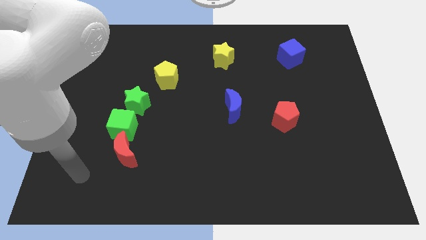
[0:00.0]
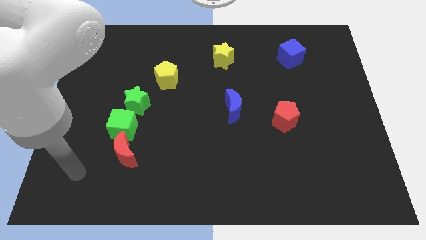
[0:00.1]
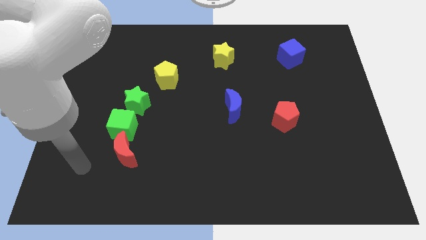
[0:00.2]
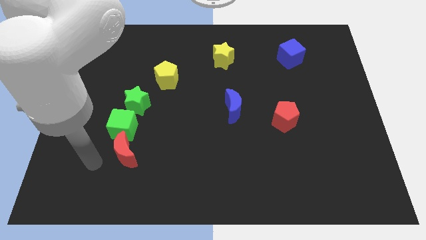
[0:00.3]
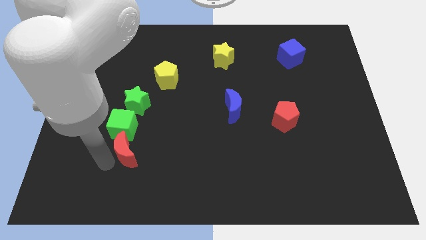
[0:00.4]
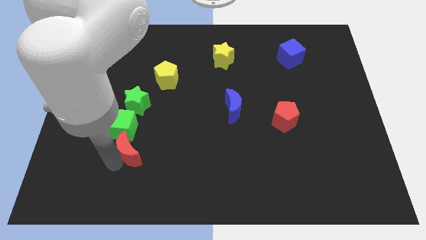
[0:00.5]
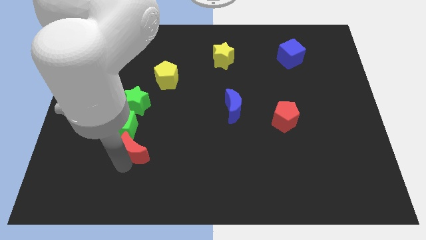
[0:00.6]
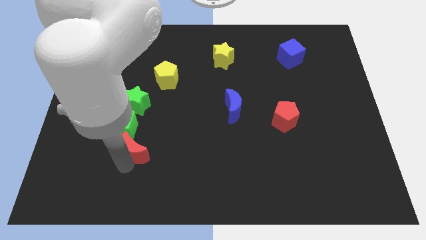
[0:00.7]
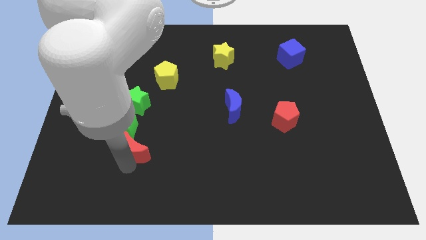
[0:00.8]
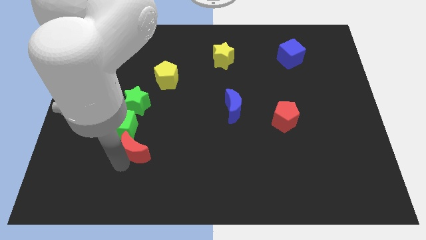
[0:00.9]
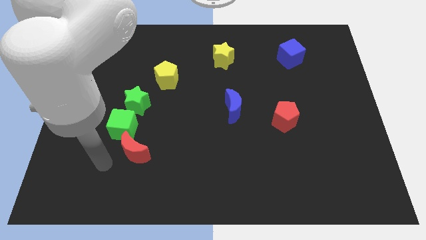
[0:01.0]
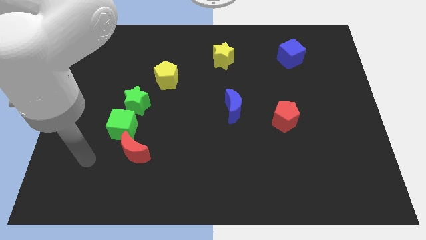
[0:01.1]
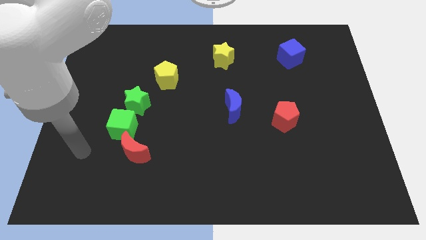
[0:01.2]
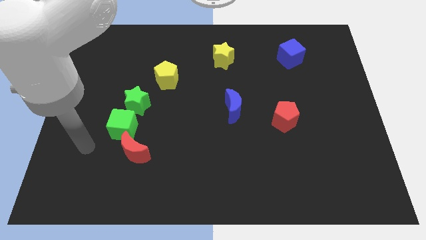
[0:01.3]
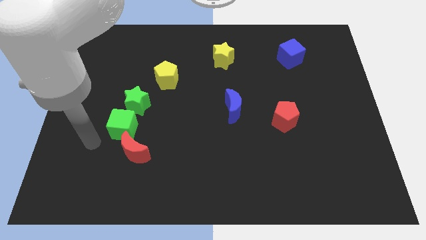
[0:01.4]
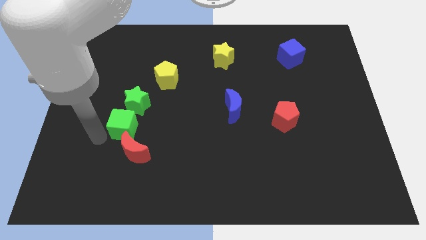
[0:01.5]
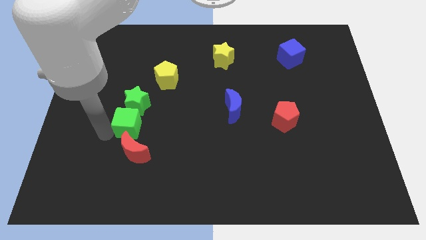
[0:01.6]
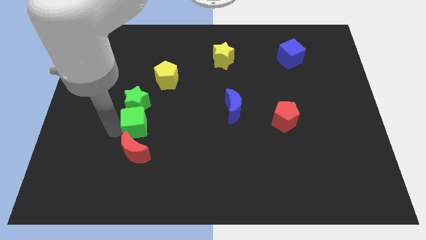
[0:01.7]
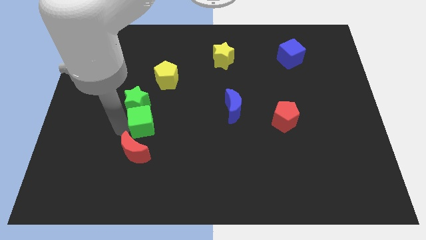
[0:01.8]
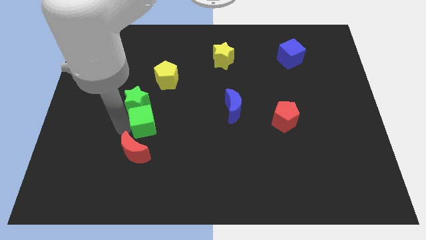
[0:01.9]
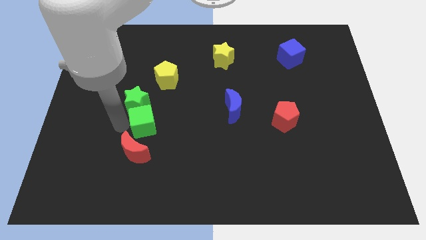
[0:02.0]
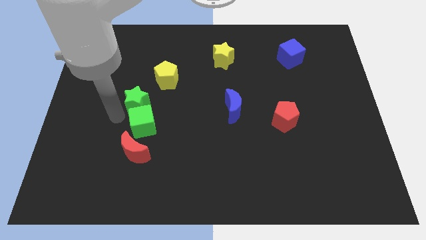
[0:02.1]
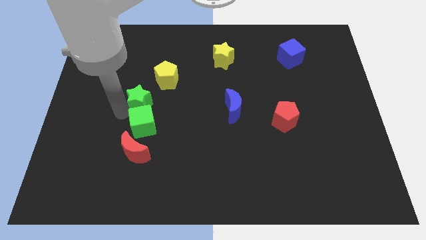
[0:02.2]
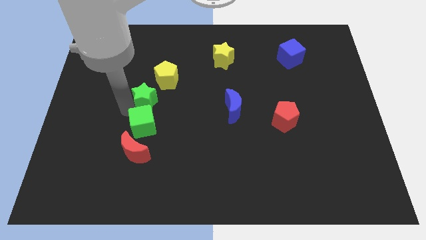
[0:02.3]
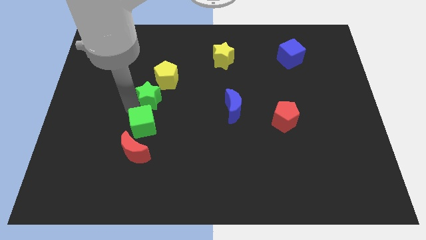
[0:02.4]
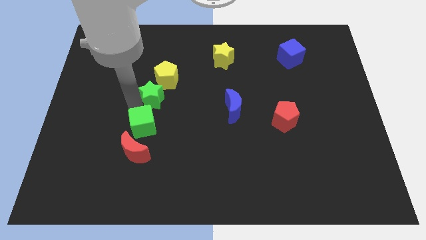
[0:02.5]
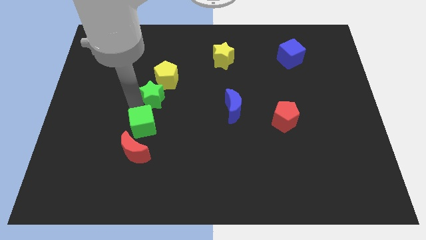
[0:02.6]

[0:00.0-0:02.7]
move green cube above red moon

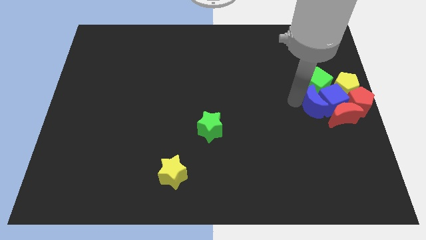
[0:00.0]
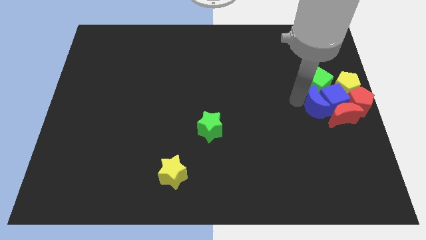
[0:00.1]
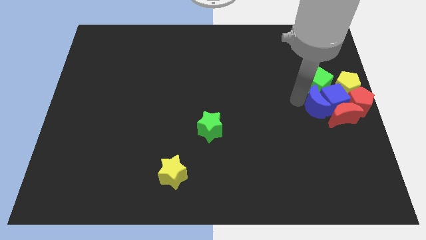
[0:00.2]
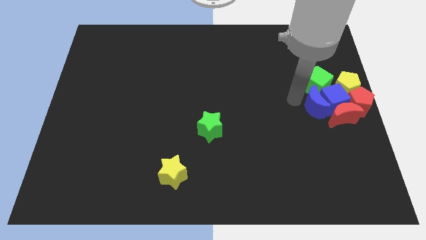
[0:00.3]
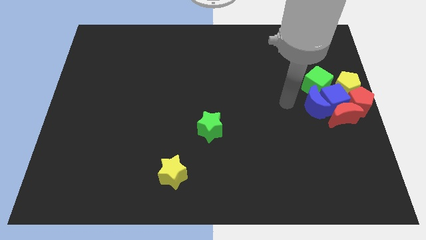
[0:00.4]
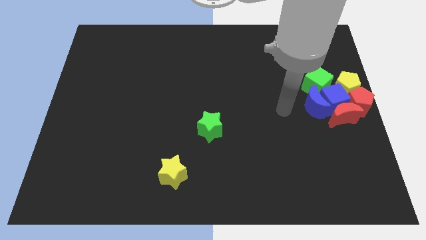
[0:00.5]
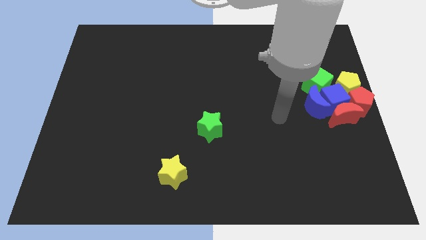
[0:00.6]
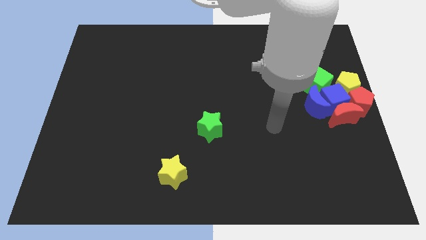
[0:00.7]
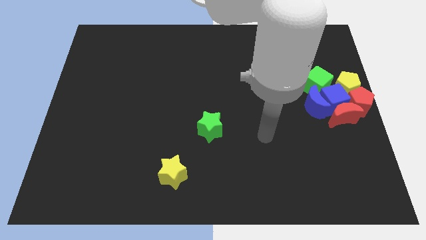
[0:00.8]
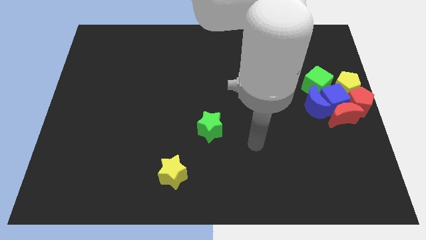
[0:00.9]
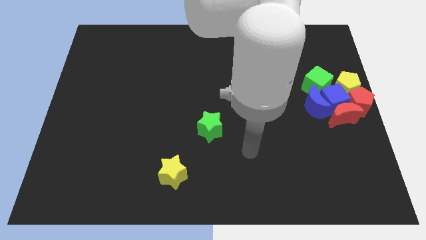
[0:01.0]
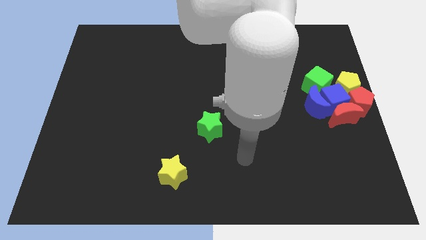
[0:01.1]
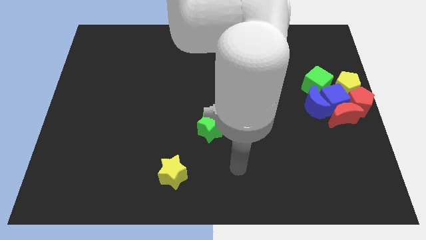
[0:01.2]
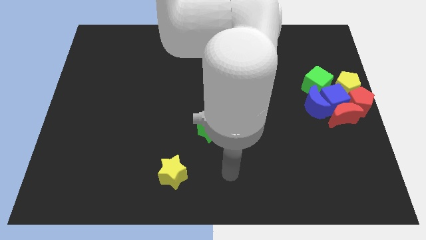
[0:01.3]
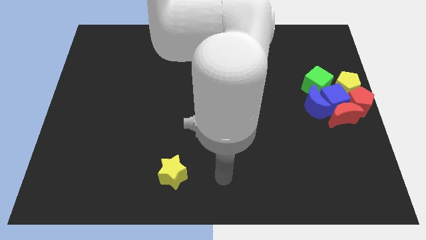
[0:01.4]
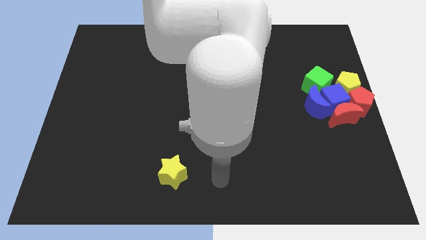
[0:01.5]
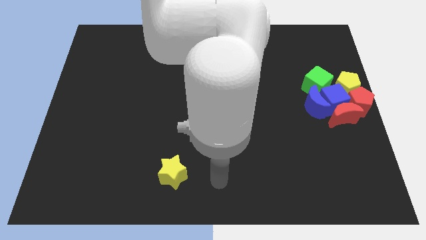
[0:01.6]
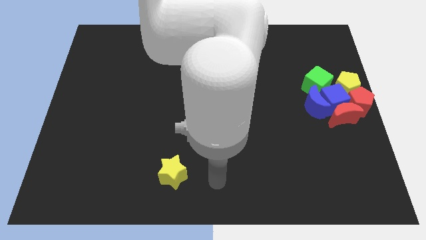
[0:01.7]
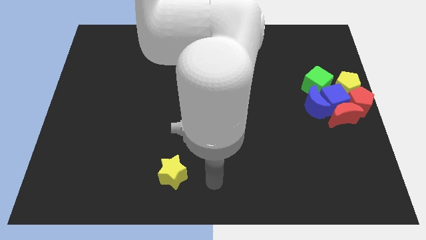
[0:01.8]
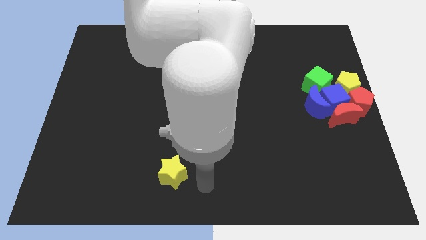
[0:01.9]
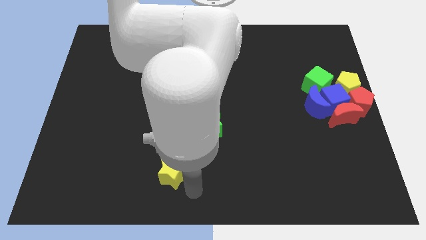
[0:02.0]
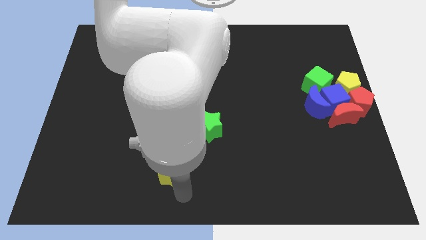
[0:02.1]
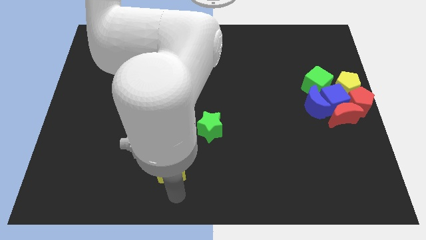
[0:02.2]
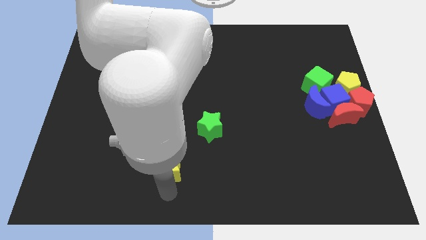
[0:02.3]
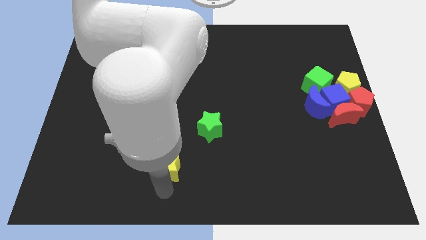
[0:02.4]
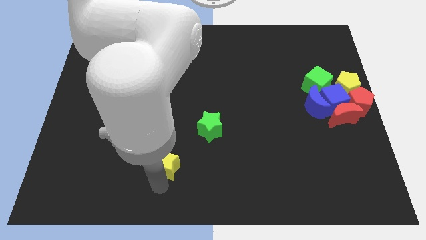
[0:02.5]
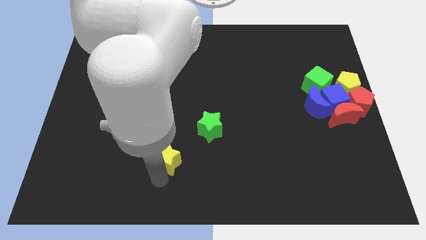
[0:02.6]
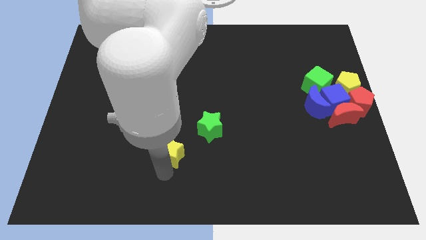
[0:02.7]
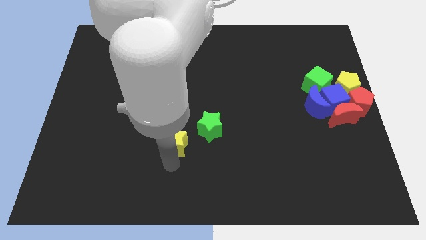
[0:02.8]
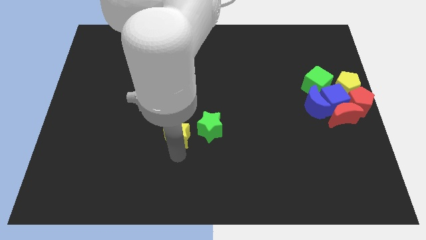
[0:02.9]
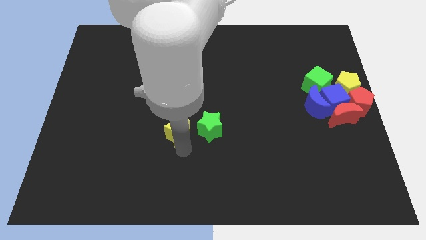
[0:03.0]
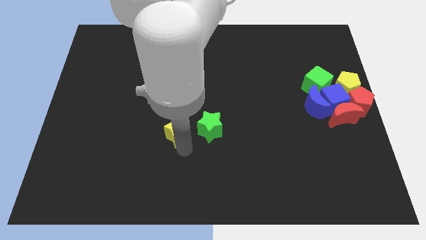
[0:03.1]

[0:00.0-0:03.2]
place yellow star to the left of green star

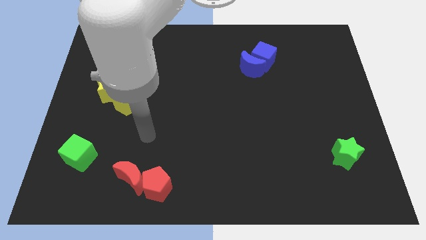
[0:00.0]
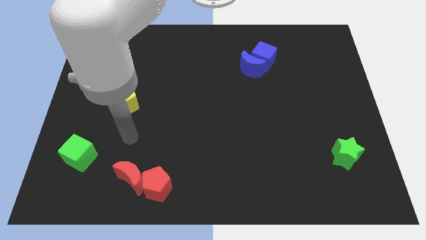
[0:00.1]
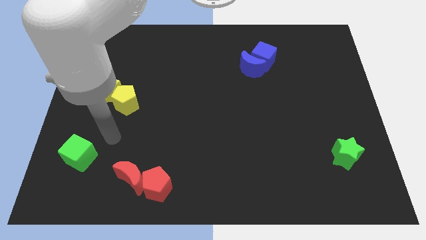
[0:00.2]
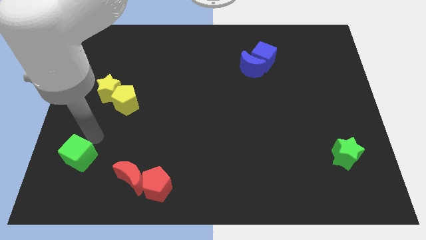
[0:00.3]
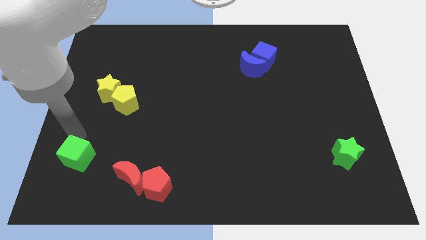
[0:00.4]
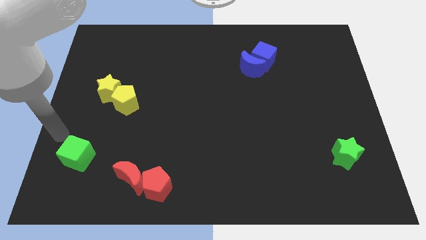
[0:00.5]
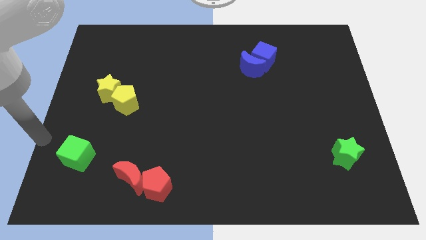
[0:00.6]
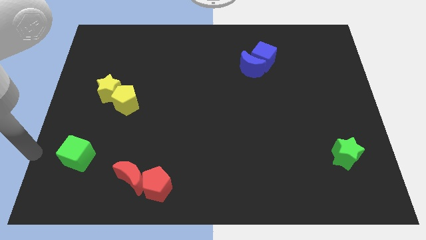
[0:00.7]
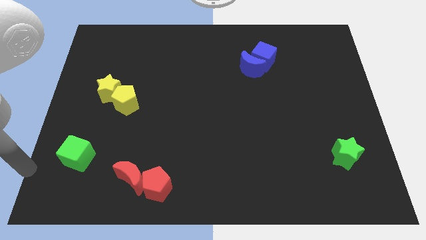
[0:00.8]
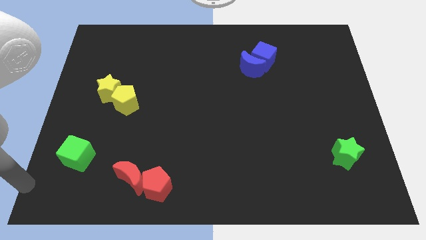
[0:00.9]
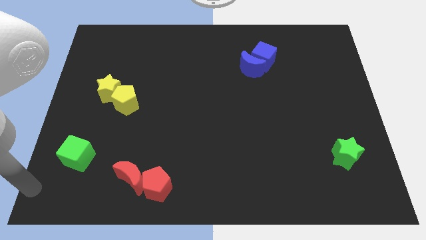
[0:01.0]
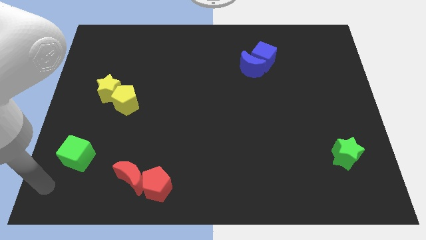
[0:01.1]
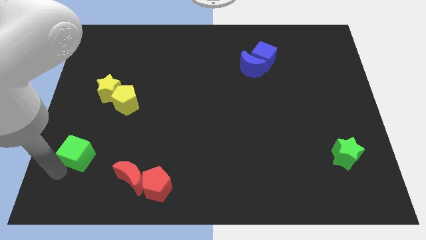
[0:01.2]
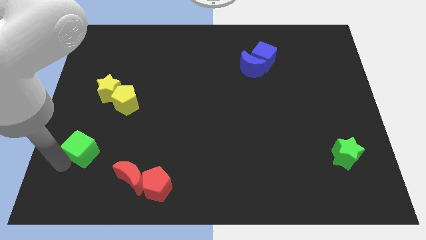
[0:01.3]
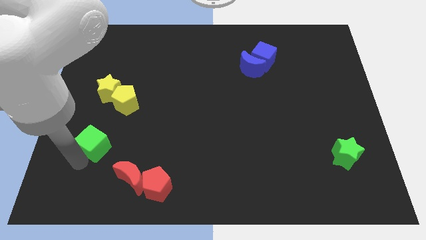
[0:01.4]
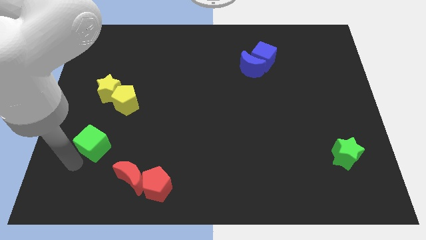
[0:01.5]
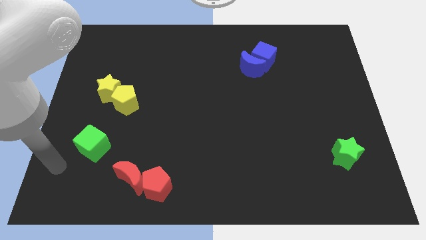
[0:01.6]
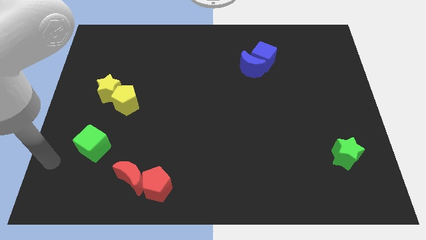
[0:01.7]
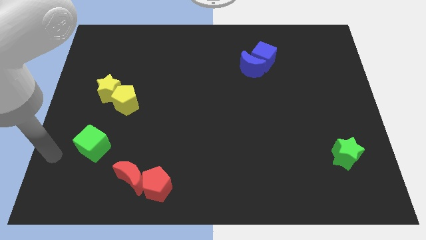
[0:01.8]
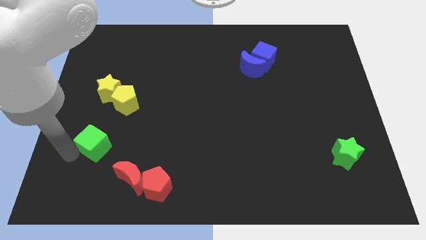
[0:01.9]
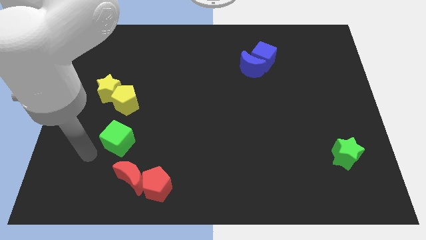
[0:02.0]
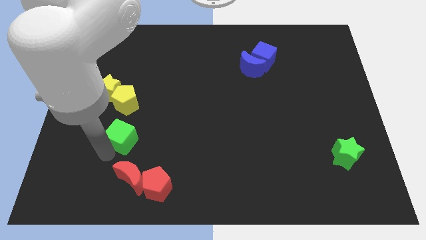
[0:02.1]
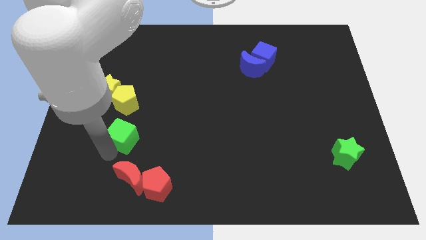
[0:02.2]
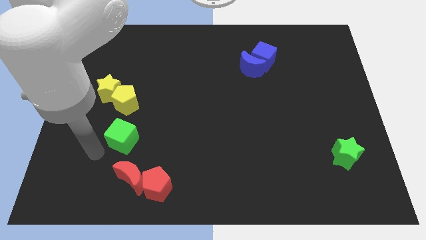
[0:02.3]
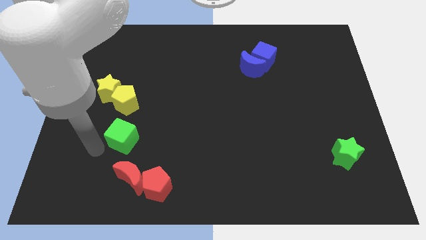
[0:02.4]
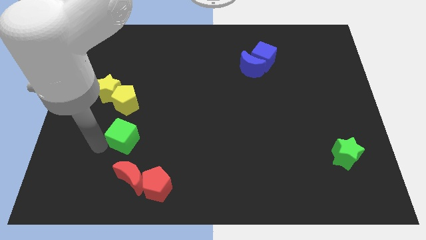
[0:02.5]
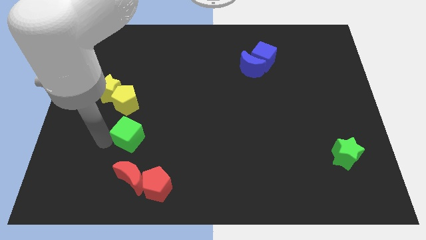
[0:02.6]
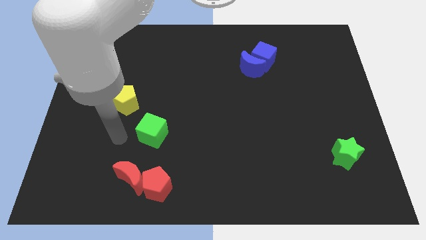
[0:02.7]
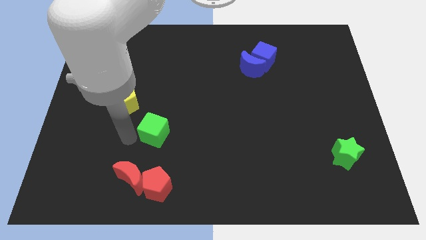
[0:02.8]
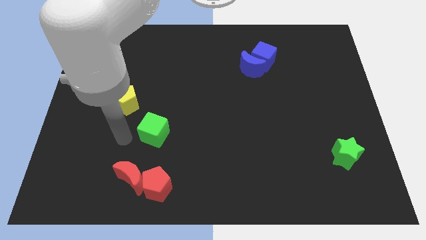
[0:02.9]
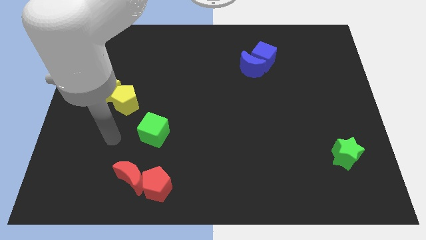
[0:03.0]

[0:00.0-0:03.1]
push the green cube to the bottom right of the yellow pentagon
